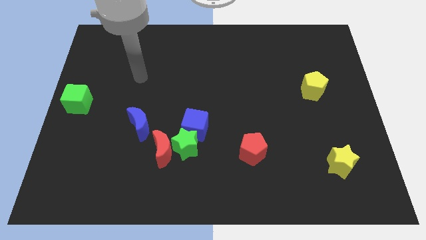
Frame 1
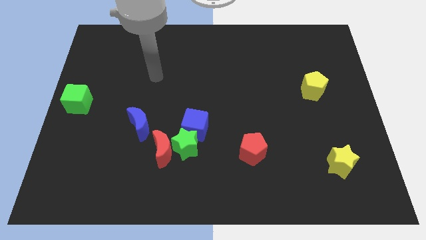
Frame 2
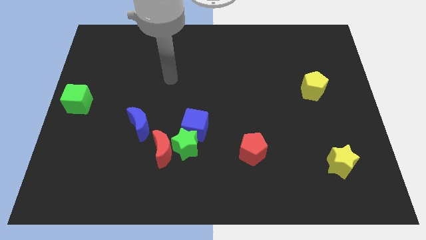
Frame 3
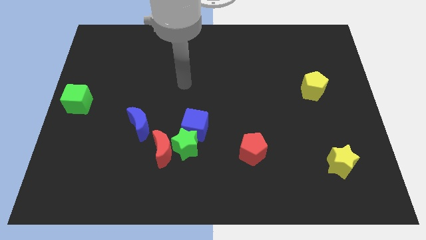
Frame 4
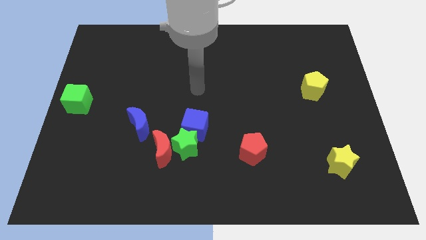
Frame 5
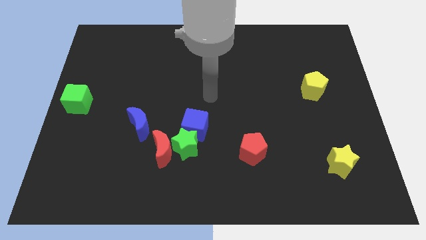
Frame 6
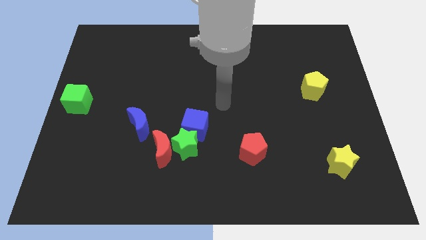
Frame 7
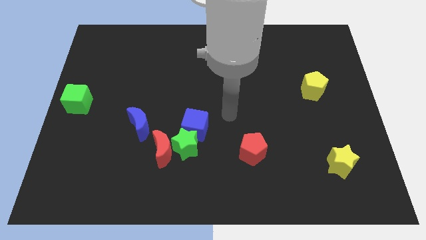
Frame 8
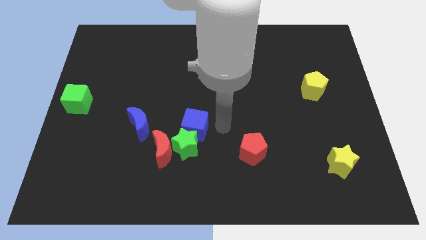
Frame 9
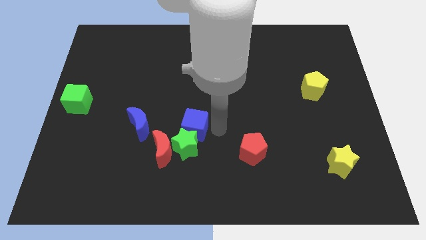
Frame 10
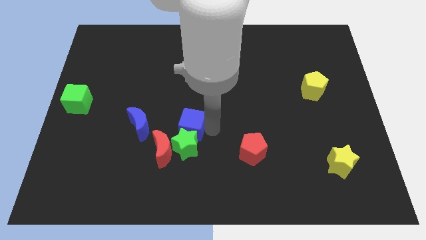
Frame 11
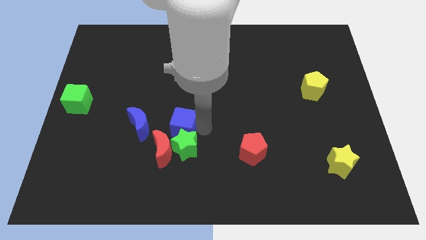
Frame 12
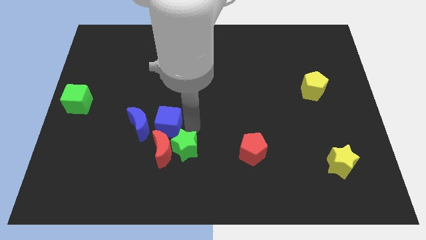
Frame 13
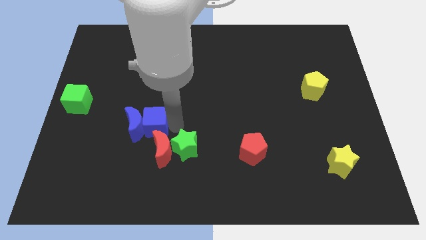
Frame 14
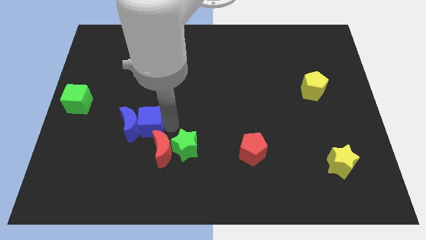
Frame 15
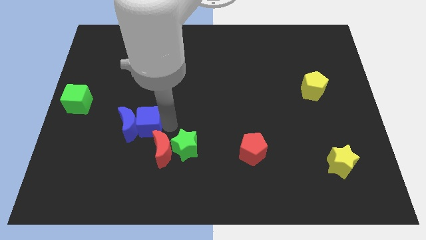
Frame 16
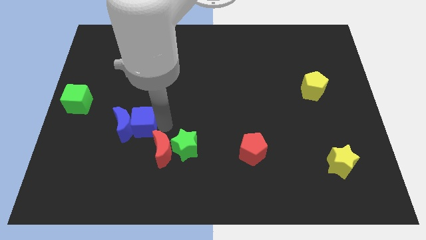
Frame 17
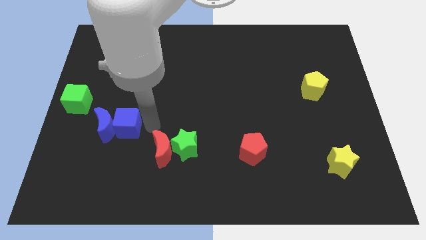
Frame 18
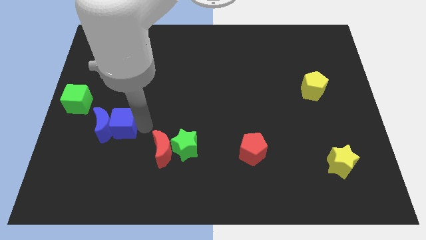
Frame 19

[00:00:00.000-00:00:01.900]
place the blue cube and blue crescent towards the center left

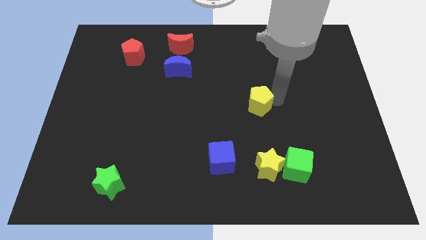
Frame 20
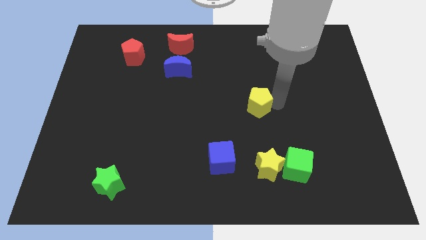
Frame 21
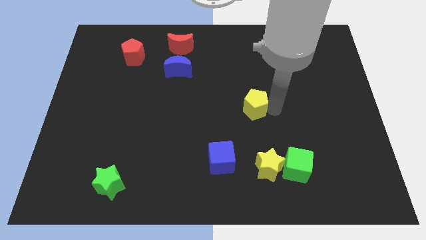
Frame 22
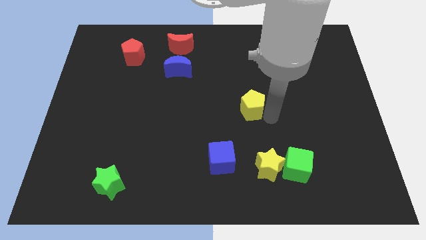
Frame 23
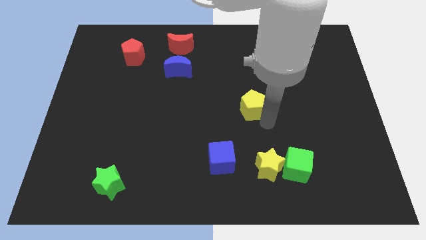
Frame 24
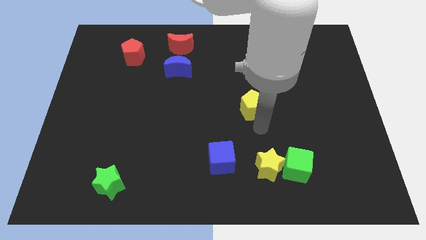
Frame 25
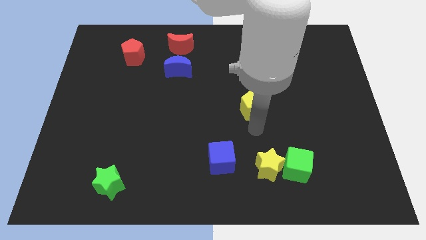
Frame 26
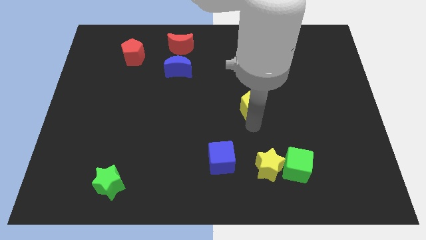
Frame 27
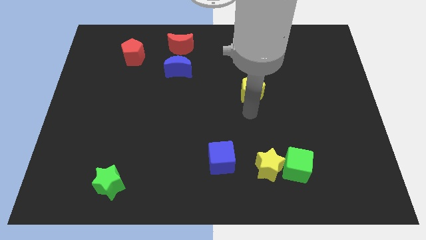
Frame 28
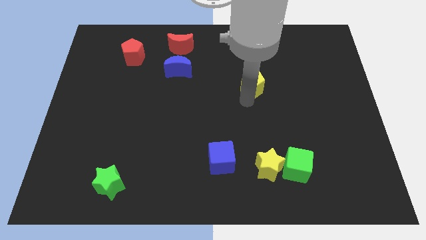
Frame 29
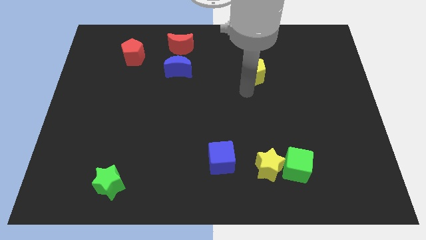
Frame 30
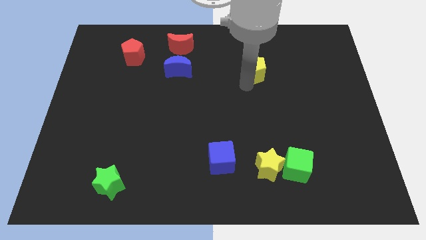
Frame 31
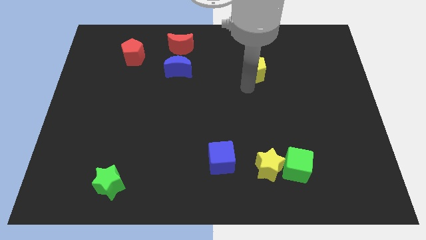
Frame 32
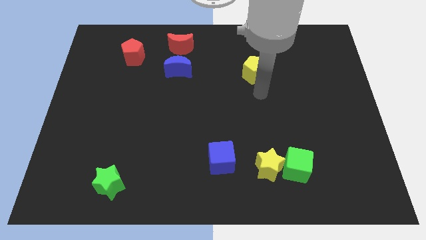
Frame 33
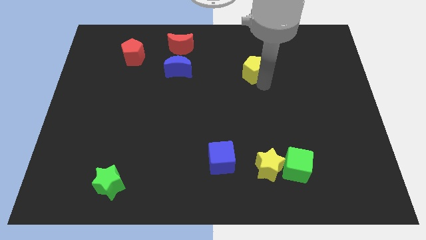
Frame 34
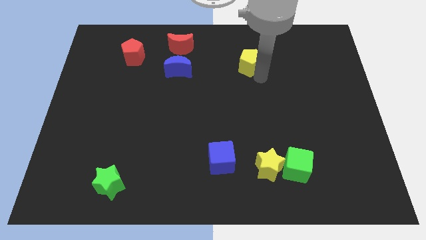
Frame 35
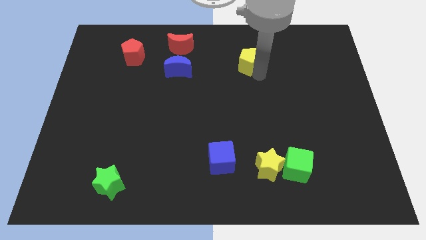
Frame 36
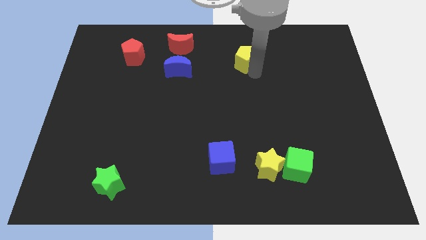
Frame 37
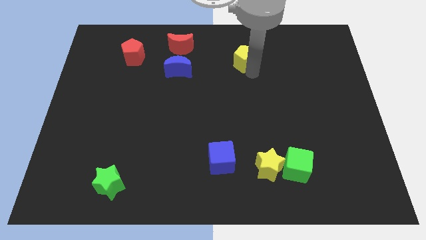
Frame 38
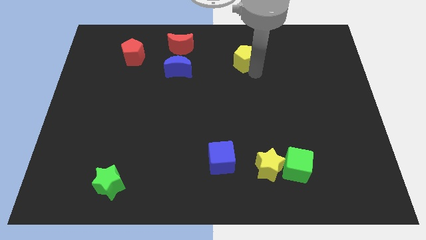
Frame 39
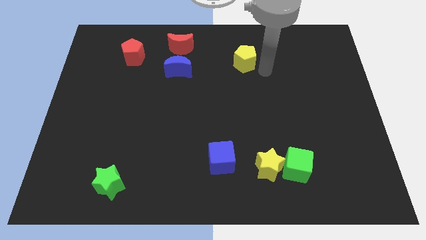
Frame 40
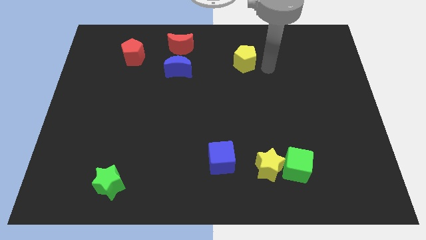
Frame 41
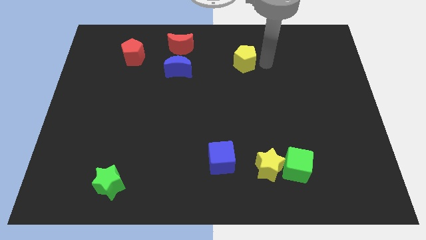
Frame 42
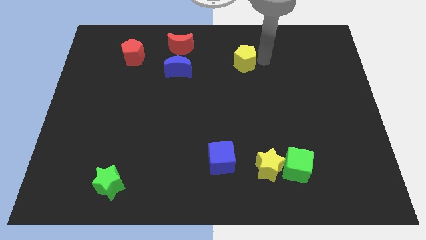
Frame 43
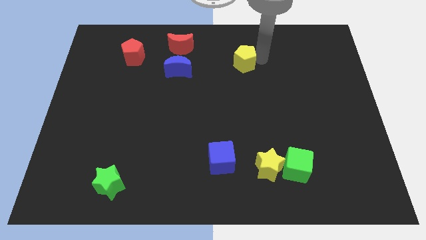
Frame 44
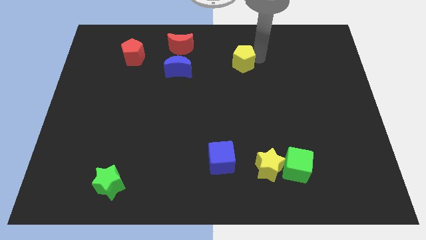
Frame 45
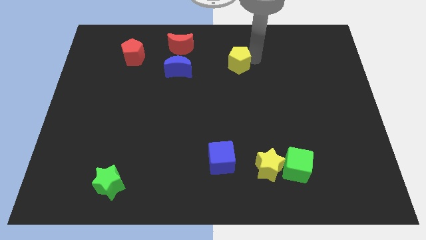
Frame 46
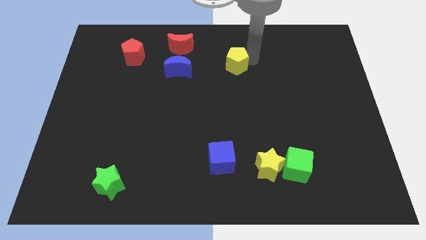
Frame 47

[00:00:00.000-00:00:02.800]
slide the yellow pentagon towards the blue moon

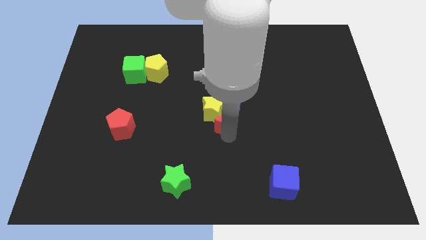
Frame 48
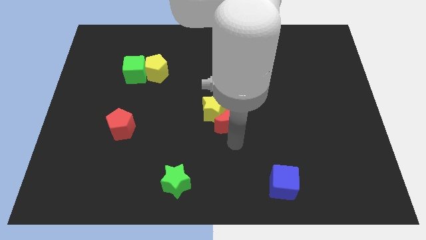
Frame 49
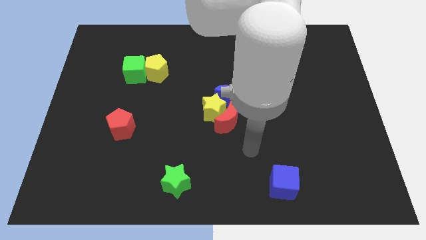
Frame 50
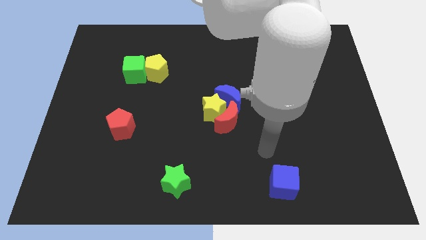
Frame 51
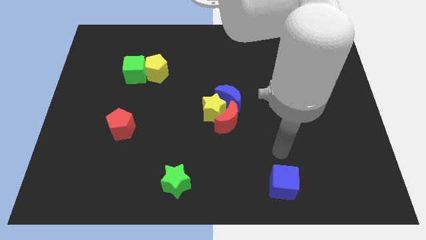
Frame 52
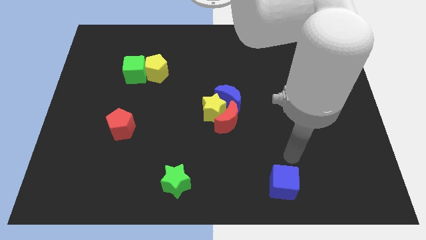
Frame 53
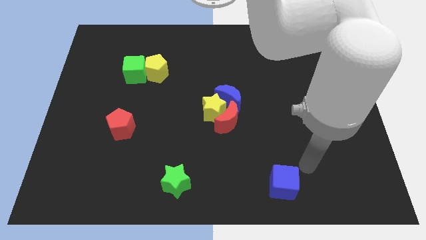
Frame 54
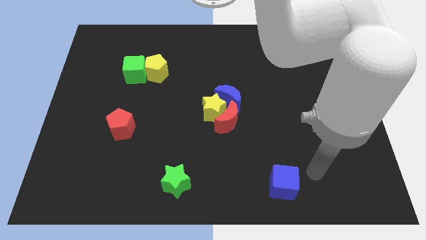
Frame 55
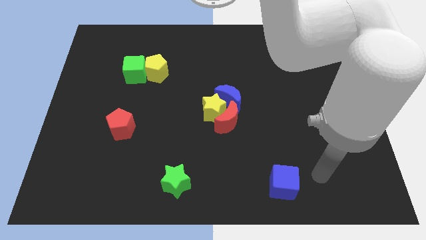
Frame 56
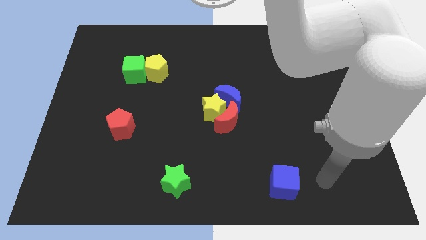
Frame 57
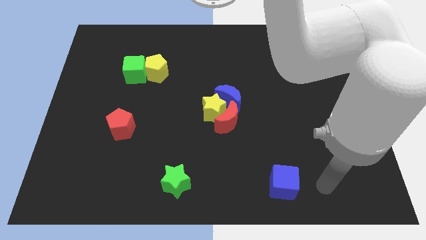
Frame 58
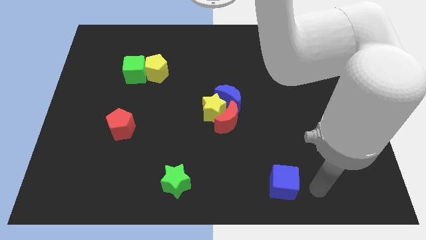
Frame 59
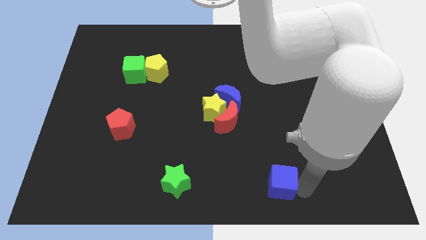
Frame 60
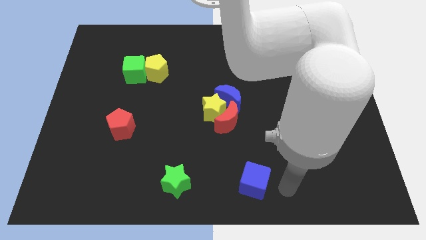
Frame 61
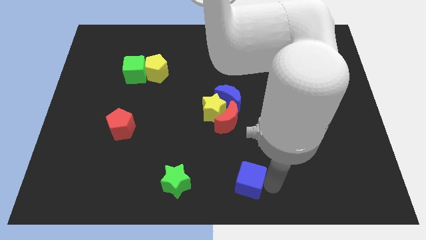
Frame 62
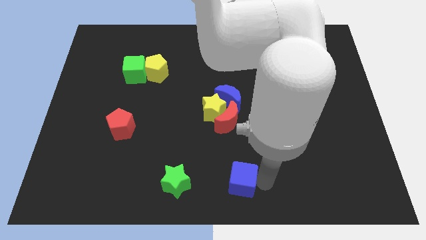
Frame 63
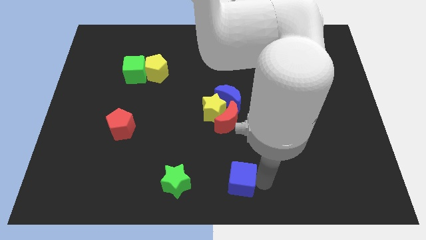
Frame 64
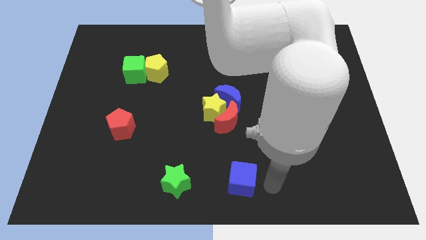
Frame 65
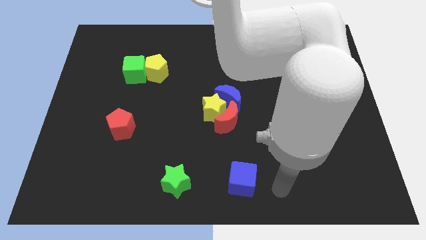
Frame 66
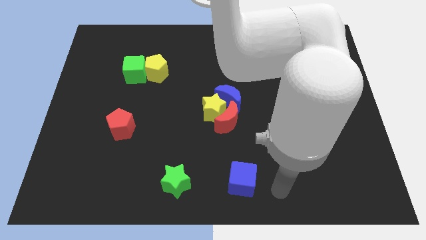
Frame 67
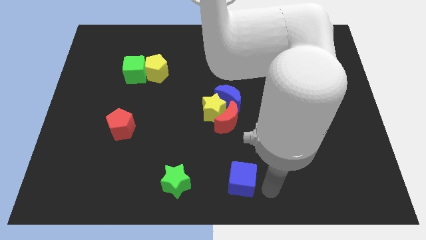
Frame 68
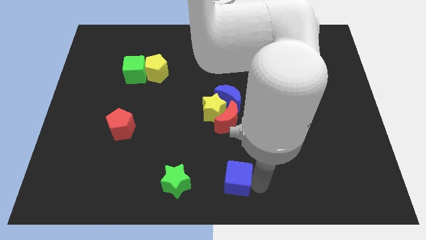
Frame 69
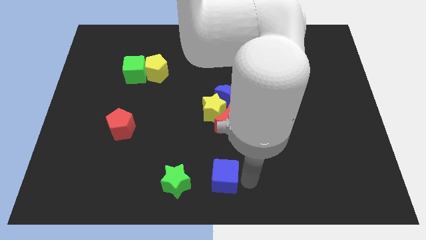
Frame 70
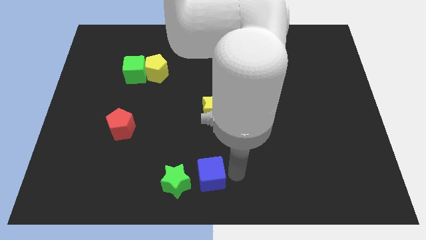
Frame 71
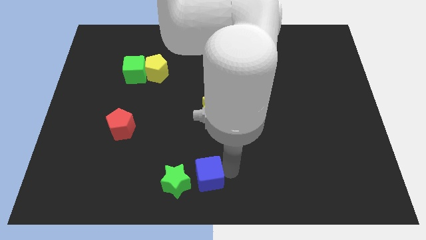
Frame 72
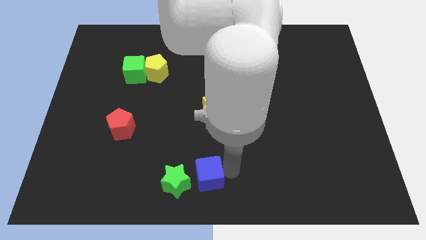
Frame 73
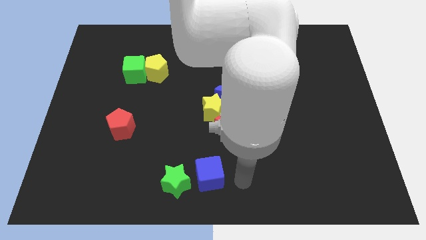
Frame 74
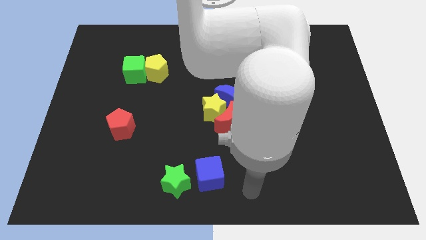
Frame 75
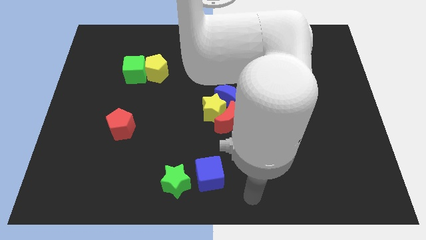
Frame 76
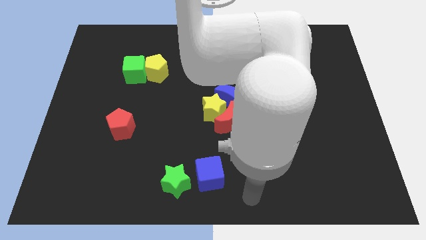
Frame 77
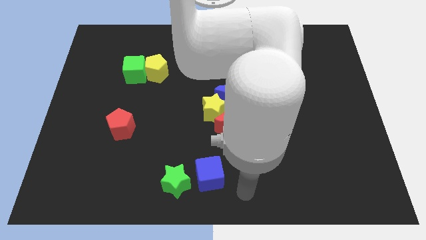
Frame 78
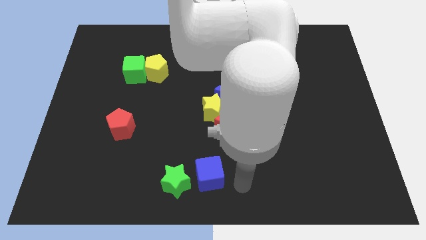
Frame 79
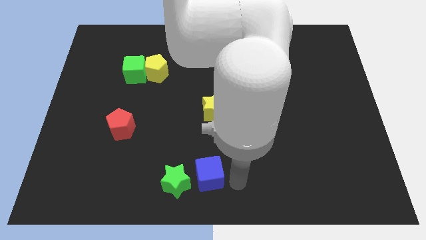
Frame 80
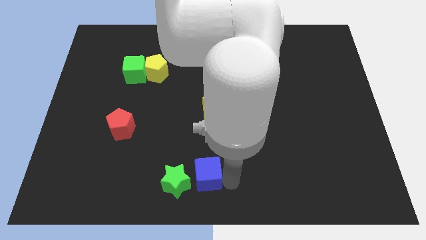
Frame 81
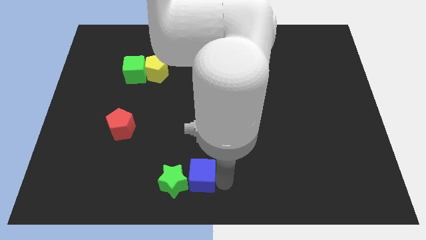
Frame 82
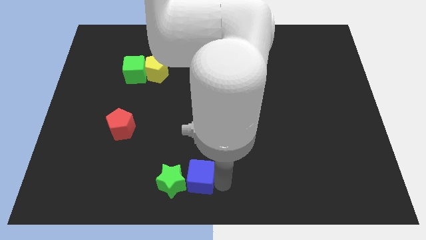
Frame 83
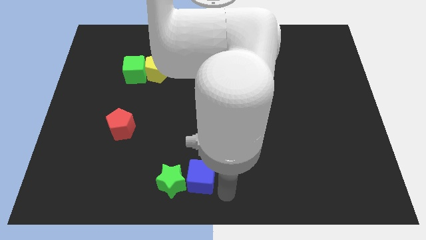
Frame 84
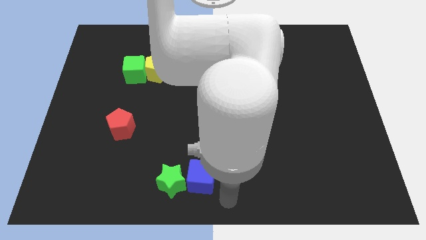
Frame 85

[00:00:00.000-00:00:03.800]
move the blue cube to the right of green star

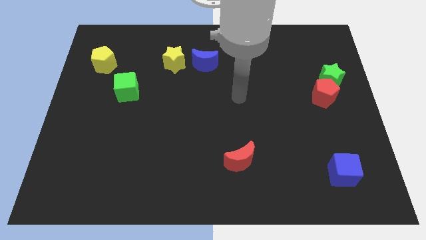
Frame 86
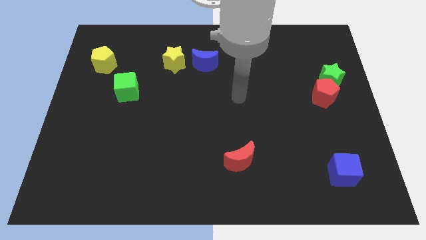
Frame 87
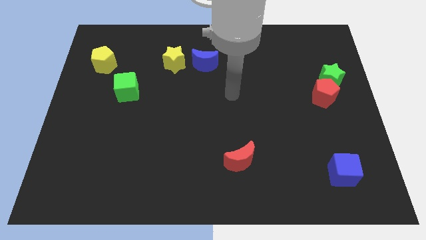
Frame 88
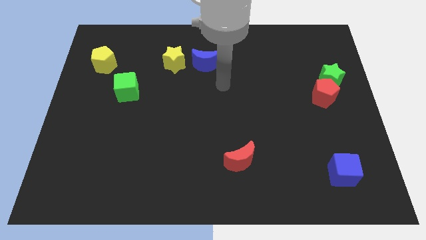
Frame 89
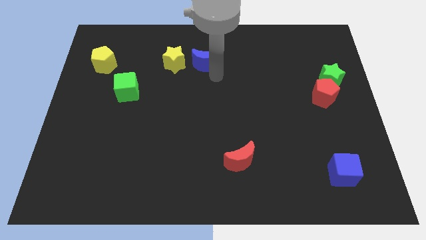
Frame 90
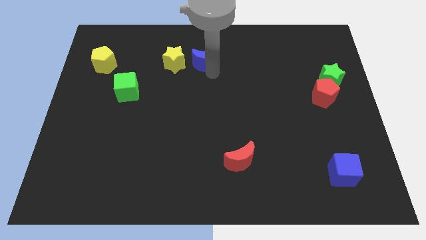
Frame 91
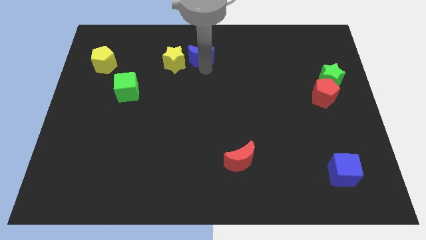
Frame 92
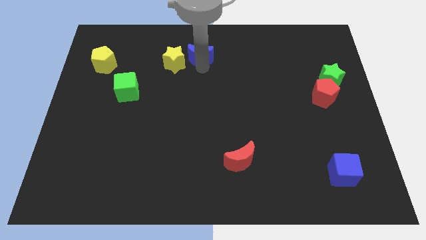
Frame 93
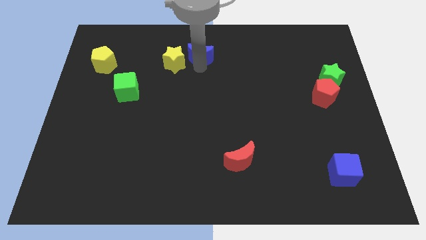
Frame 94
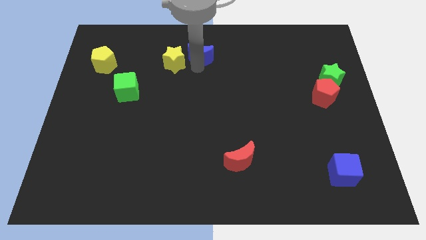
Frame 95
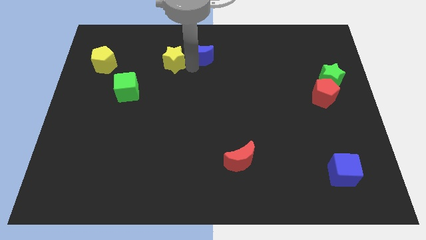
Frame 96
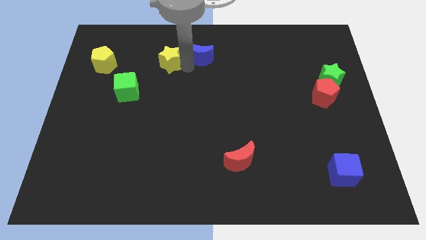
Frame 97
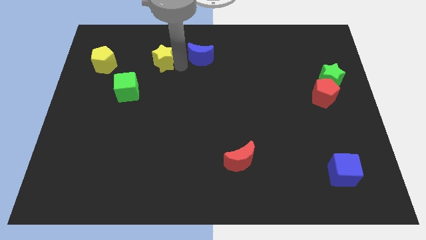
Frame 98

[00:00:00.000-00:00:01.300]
touch the yellow star on right side
